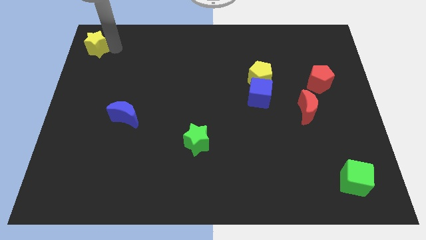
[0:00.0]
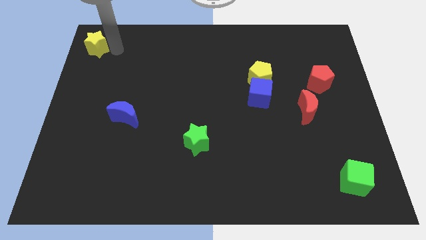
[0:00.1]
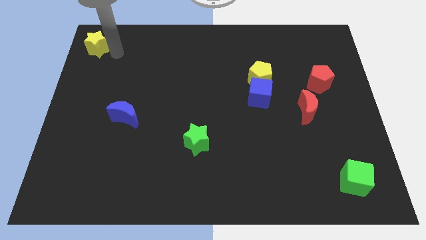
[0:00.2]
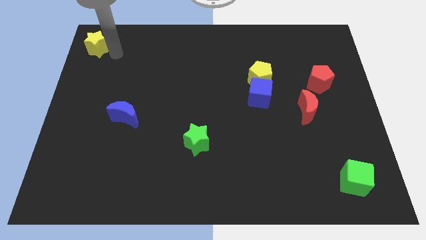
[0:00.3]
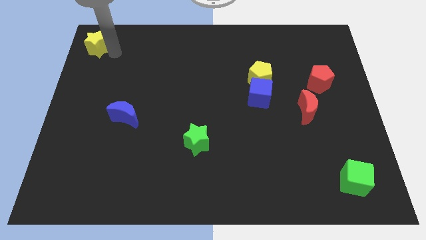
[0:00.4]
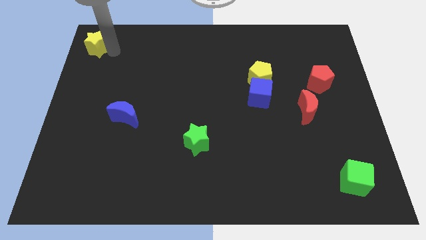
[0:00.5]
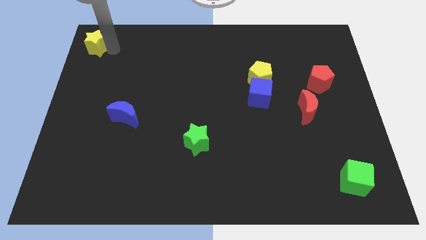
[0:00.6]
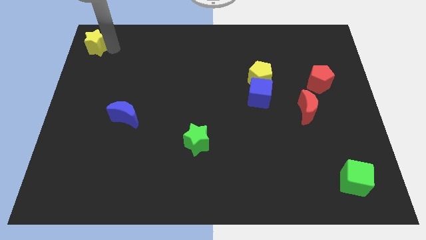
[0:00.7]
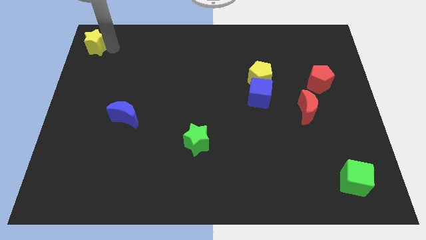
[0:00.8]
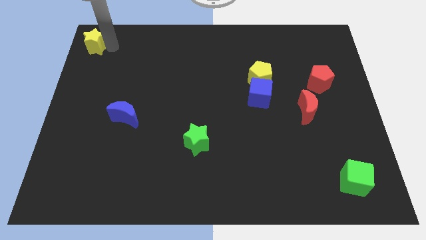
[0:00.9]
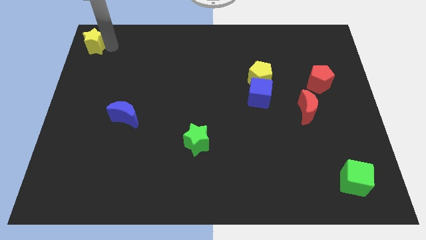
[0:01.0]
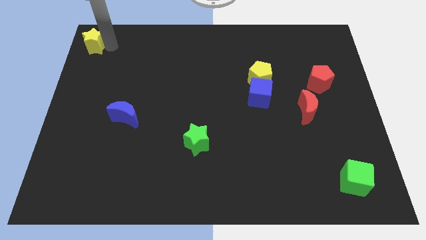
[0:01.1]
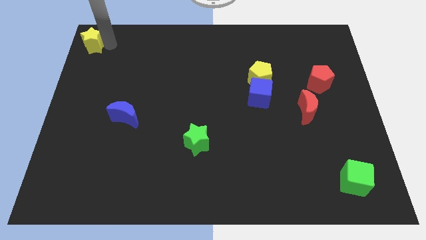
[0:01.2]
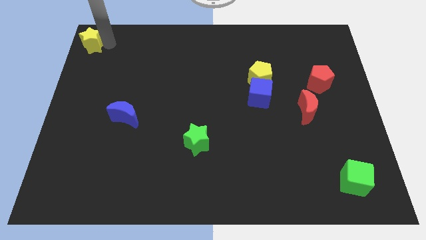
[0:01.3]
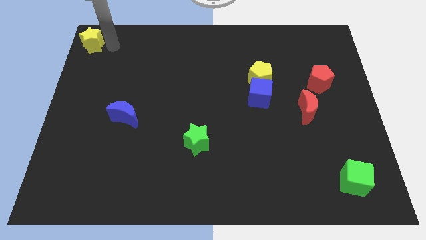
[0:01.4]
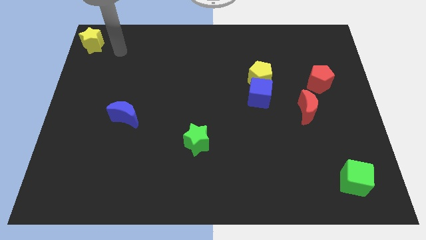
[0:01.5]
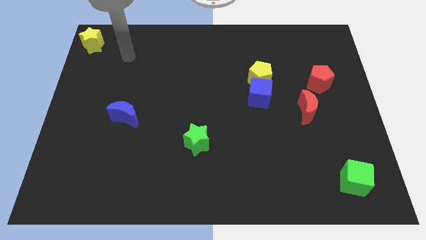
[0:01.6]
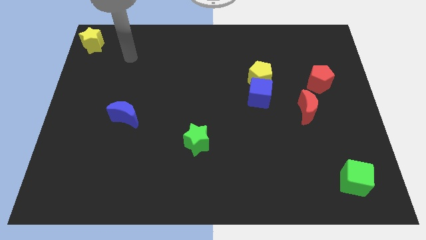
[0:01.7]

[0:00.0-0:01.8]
place the yellow star at the top left corner of the board

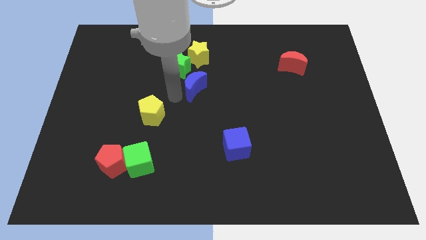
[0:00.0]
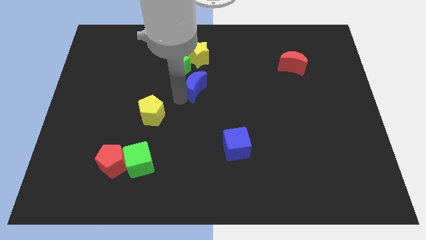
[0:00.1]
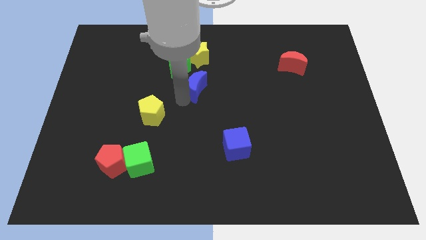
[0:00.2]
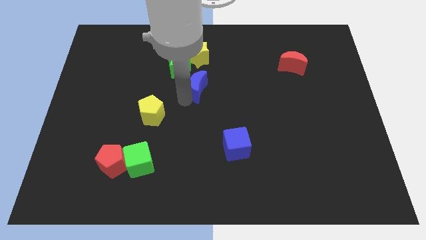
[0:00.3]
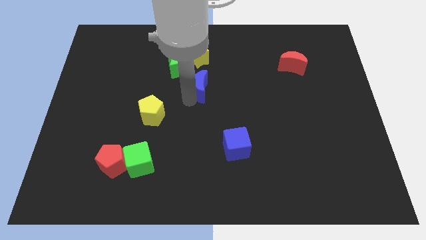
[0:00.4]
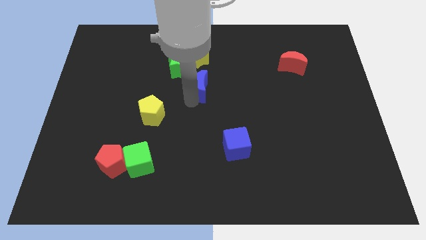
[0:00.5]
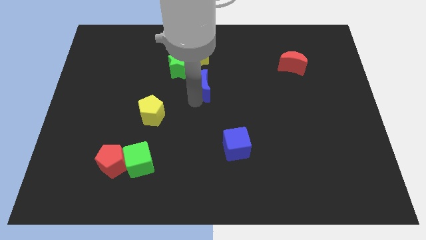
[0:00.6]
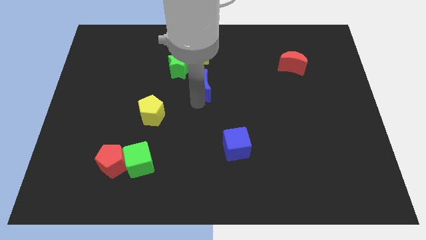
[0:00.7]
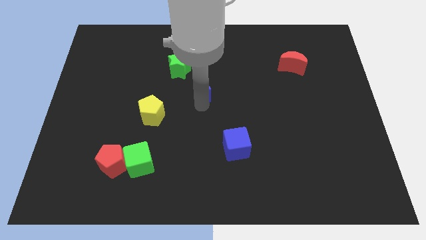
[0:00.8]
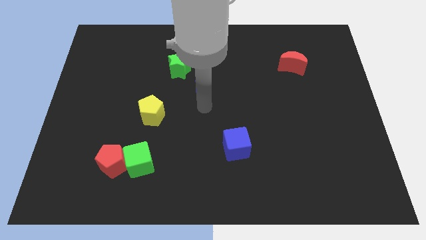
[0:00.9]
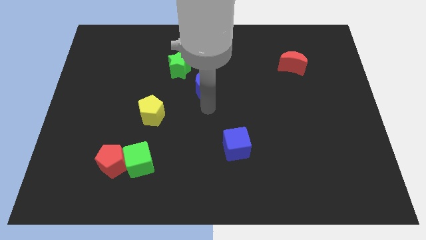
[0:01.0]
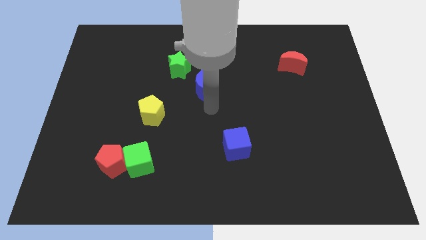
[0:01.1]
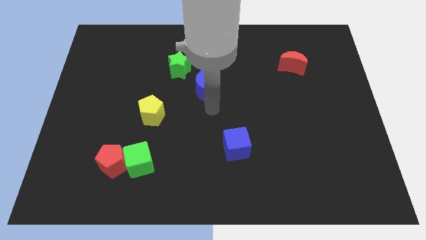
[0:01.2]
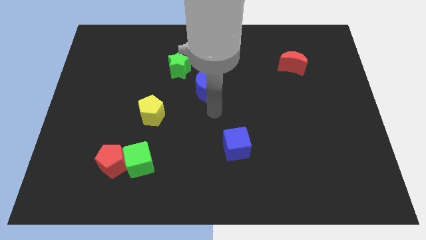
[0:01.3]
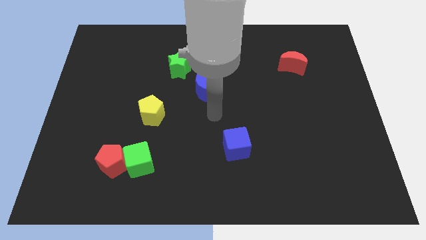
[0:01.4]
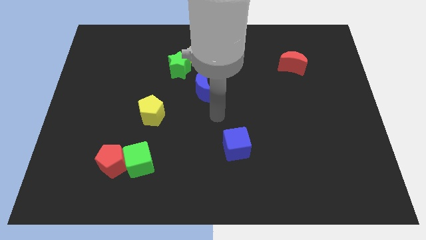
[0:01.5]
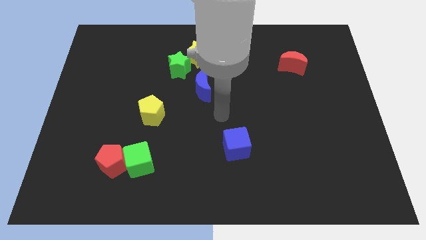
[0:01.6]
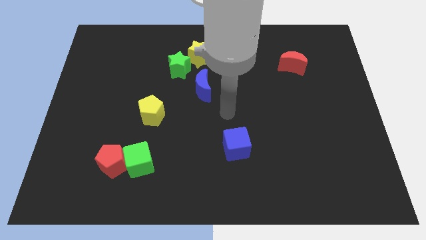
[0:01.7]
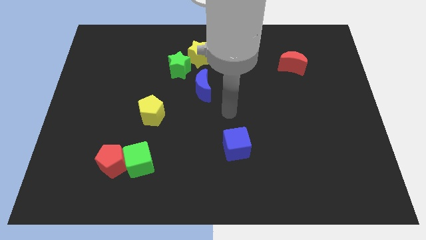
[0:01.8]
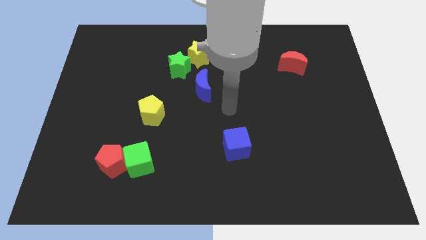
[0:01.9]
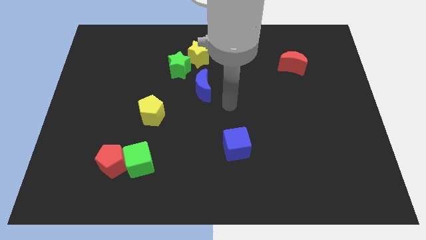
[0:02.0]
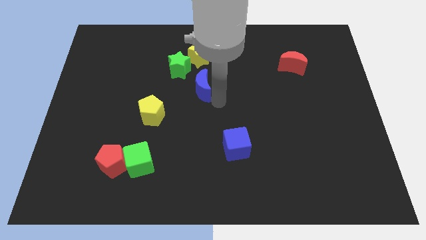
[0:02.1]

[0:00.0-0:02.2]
push the blue crescent slightly to the right side

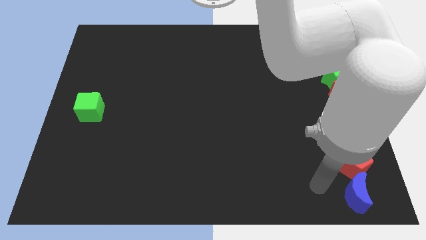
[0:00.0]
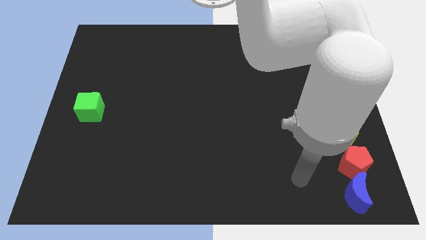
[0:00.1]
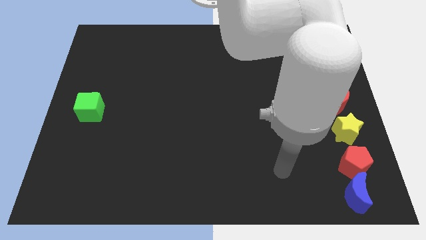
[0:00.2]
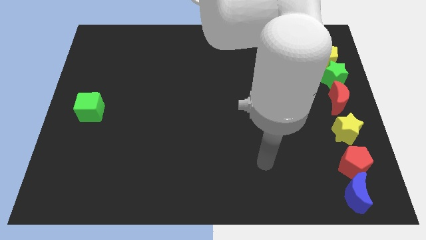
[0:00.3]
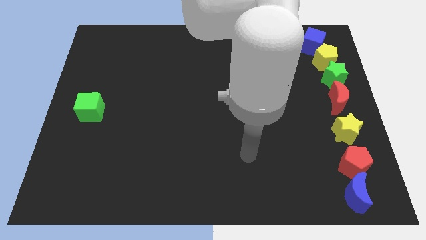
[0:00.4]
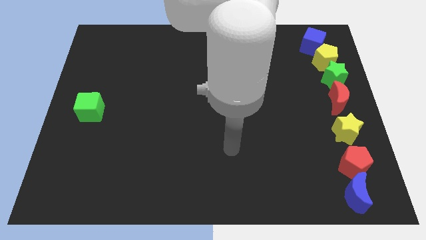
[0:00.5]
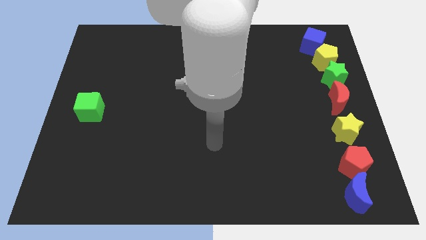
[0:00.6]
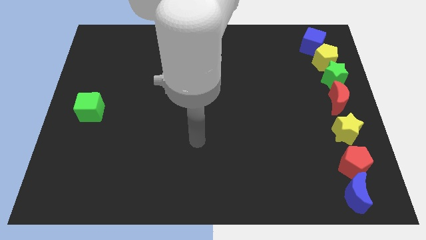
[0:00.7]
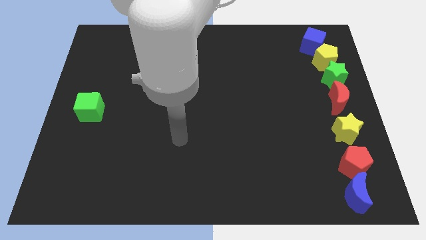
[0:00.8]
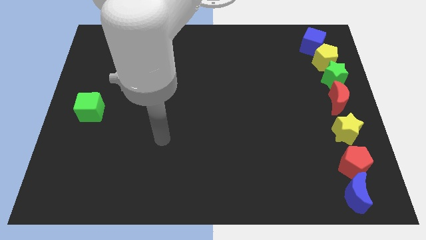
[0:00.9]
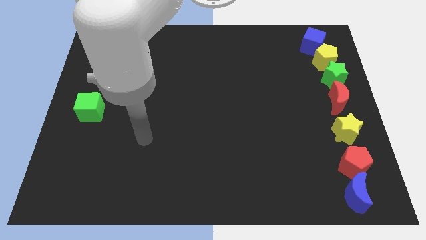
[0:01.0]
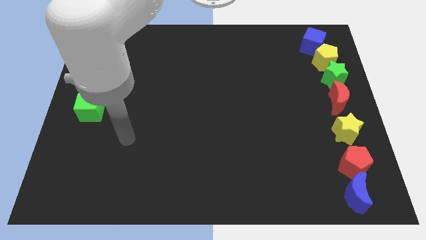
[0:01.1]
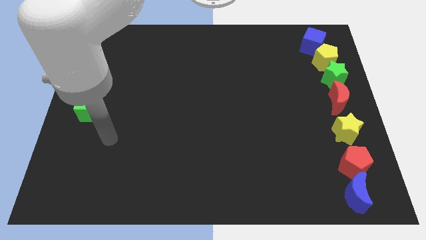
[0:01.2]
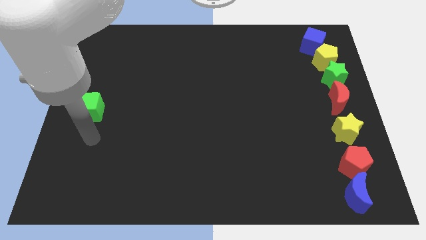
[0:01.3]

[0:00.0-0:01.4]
move your hand away from the blue moon

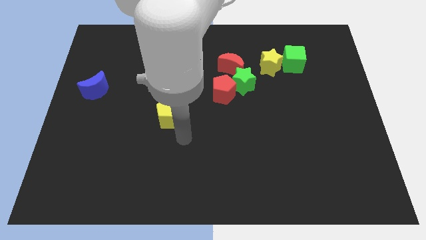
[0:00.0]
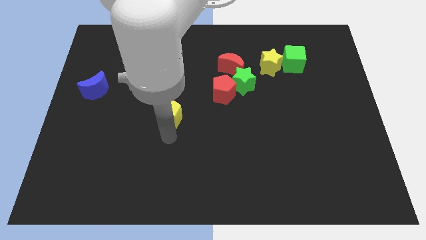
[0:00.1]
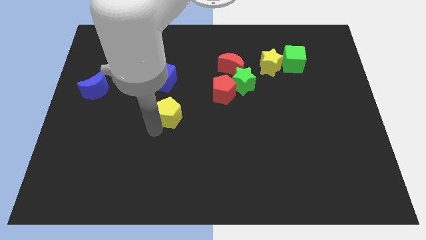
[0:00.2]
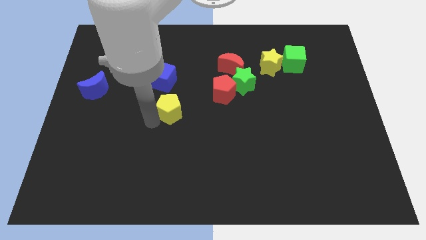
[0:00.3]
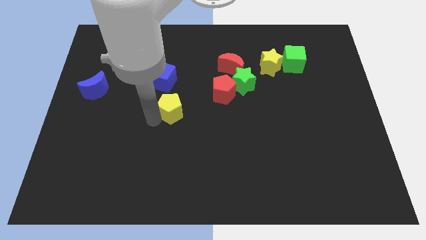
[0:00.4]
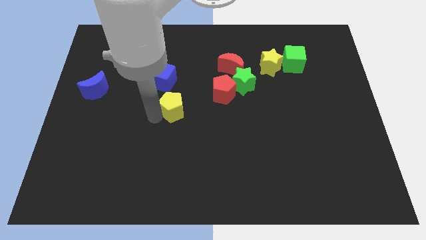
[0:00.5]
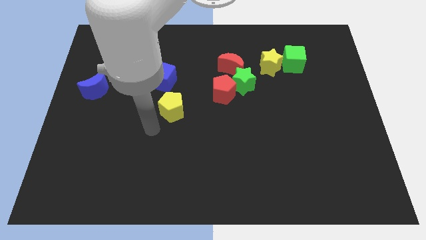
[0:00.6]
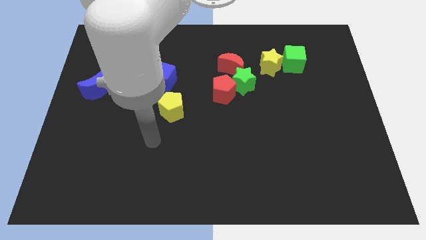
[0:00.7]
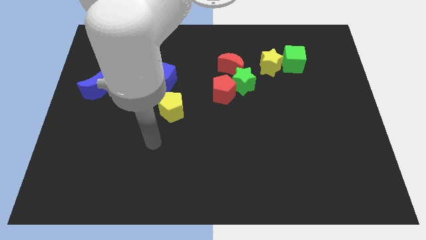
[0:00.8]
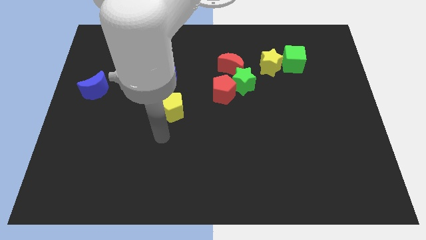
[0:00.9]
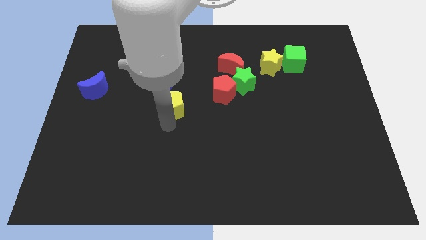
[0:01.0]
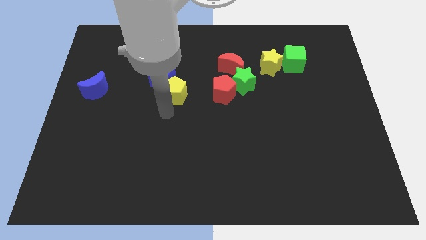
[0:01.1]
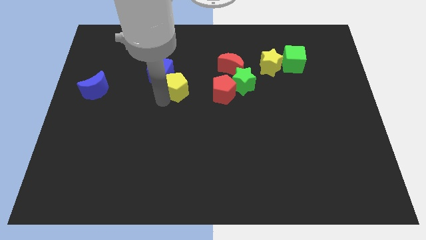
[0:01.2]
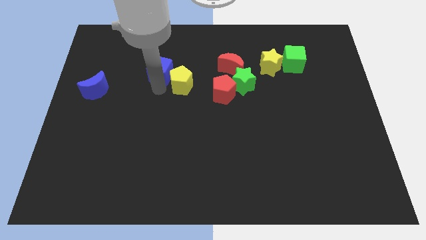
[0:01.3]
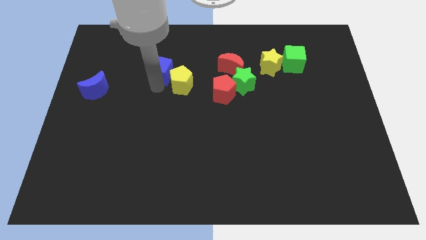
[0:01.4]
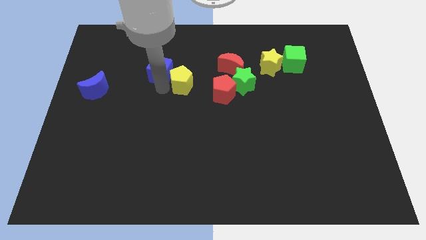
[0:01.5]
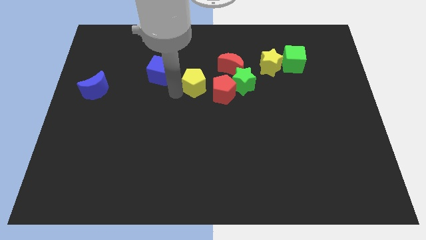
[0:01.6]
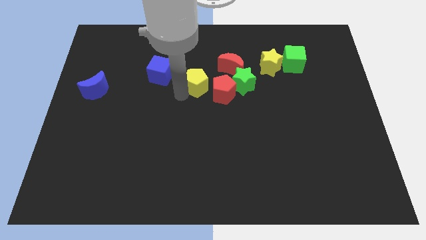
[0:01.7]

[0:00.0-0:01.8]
put the yellow pentagon in between the red pentagon and blue cube

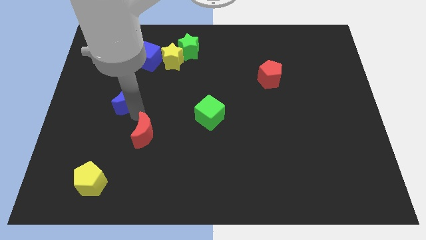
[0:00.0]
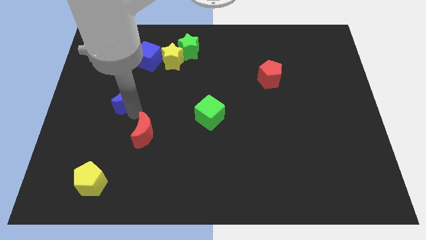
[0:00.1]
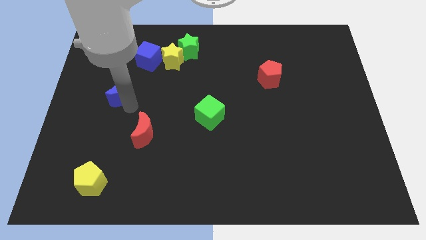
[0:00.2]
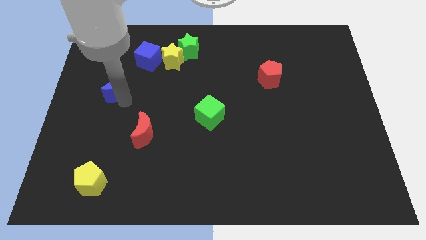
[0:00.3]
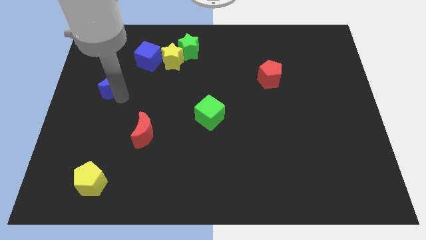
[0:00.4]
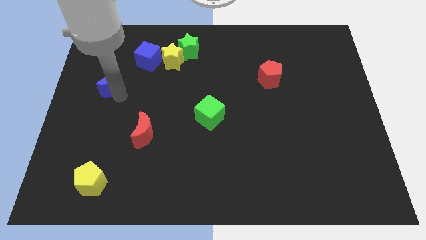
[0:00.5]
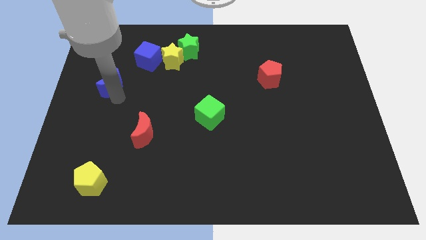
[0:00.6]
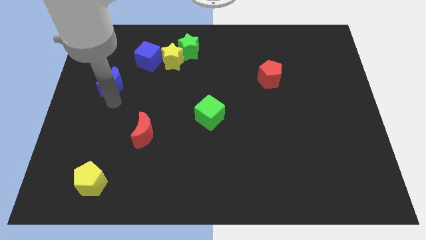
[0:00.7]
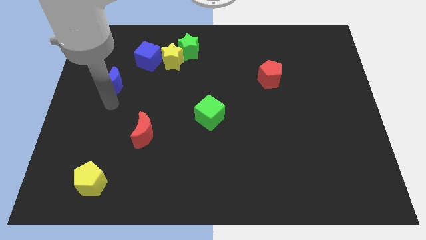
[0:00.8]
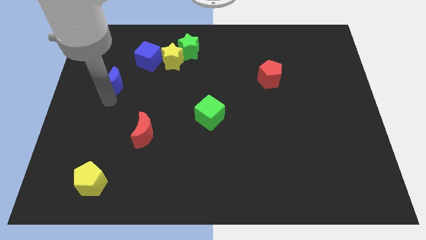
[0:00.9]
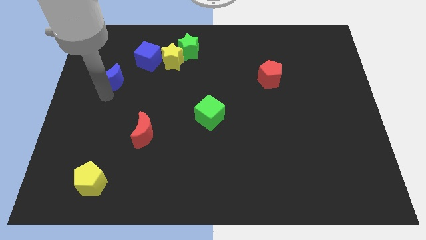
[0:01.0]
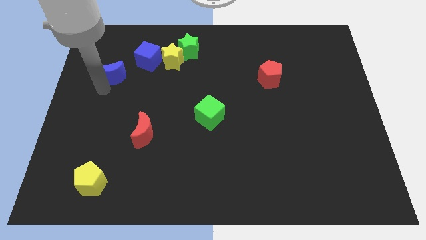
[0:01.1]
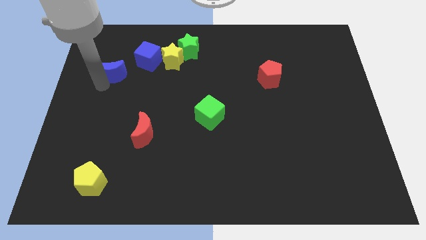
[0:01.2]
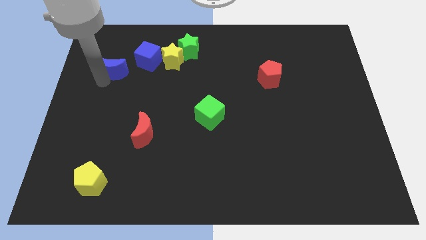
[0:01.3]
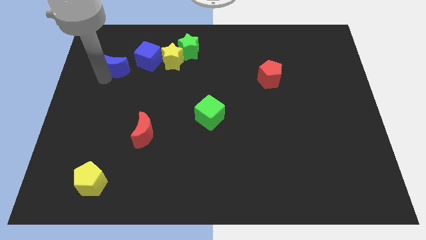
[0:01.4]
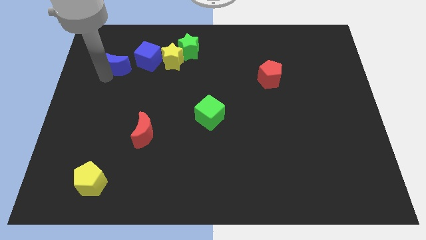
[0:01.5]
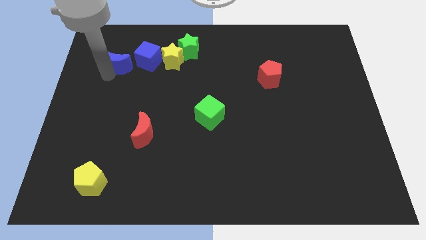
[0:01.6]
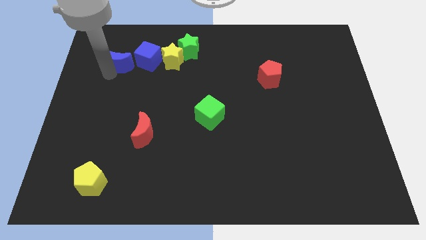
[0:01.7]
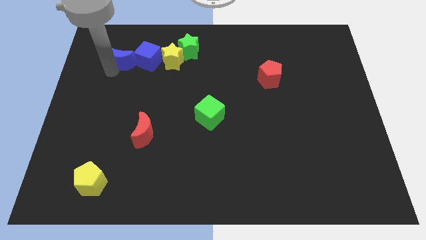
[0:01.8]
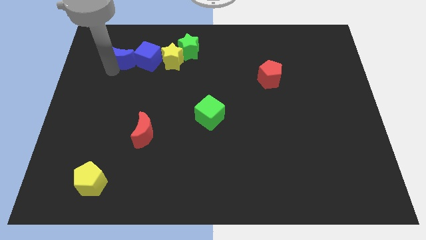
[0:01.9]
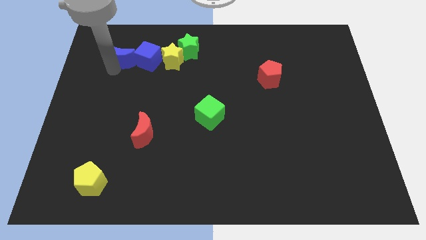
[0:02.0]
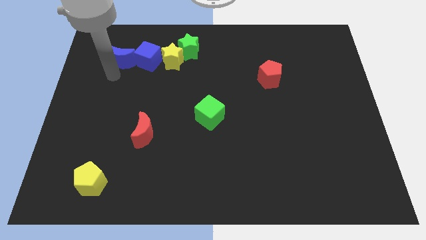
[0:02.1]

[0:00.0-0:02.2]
move the blue moon to the left of the blue cube
